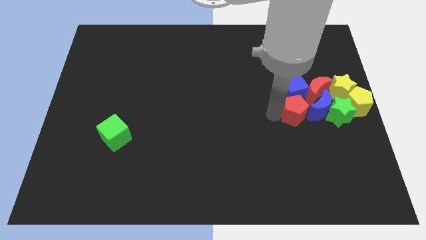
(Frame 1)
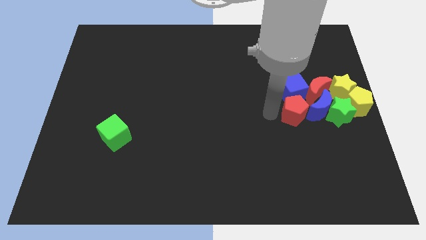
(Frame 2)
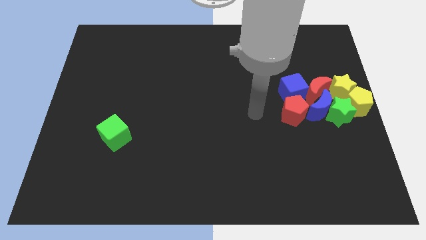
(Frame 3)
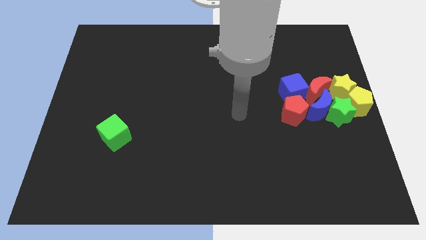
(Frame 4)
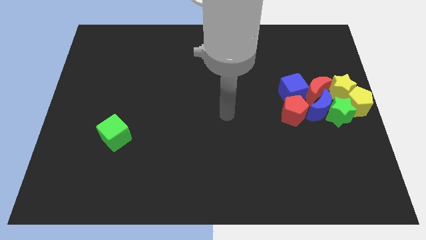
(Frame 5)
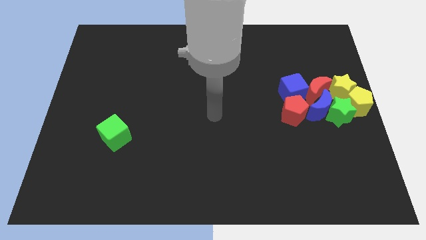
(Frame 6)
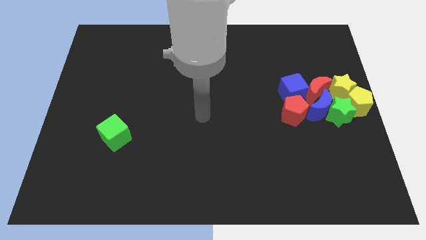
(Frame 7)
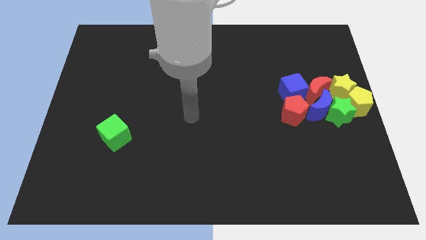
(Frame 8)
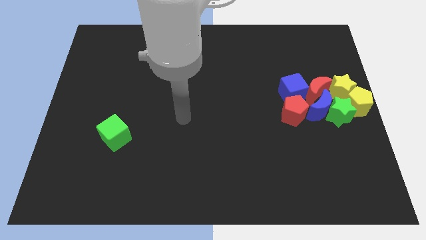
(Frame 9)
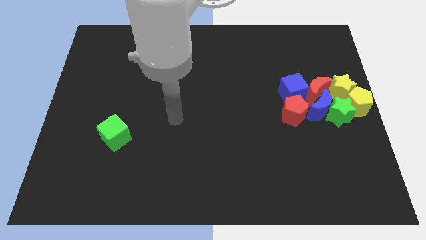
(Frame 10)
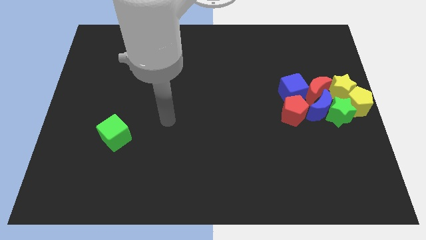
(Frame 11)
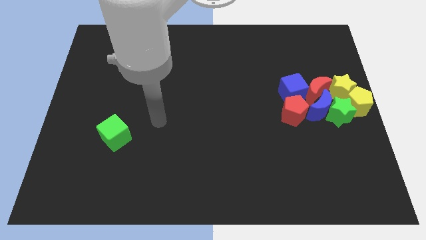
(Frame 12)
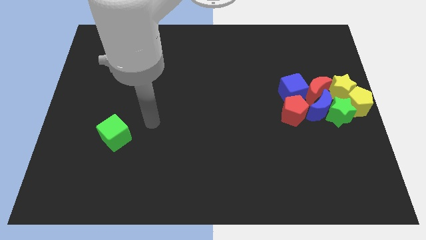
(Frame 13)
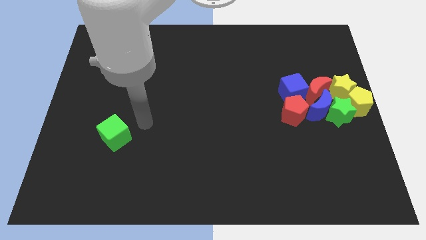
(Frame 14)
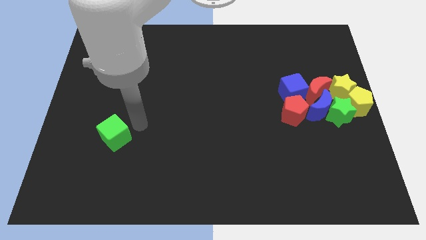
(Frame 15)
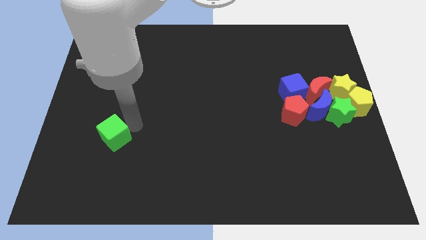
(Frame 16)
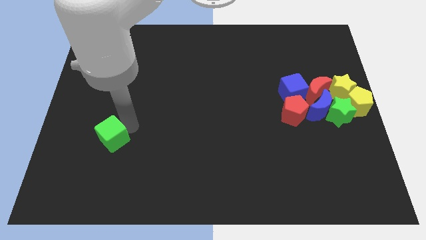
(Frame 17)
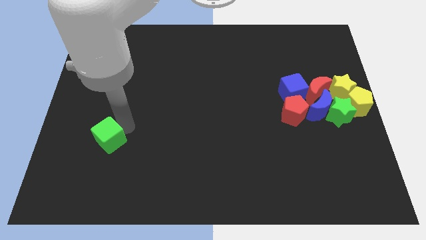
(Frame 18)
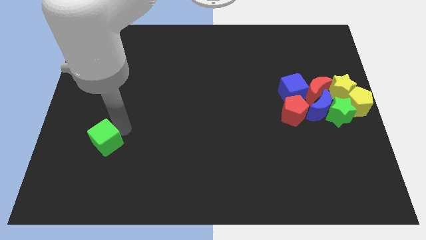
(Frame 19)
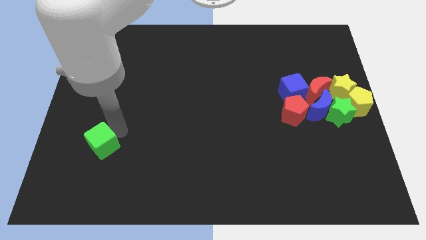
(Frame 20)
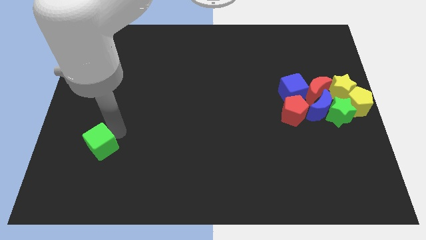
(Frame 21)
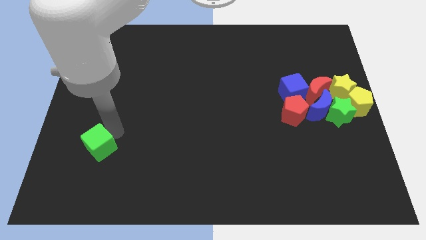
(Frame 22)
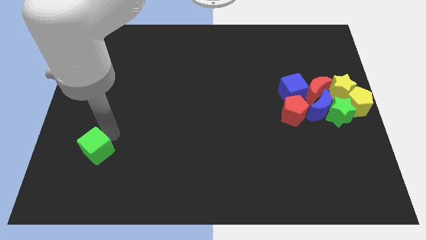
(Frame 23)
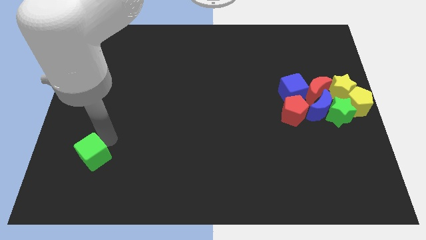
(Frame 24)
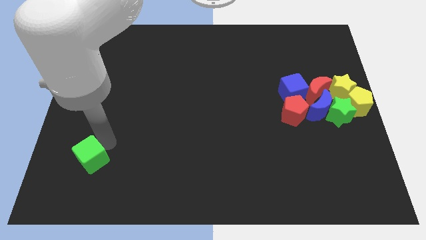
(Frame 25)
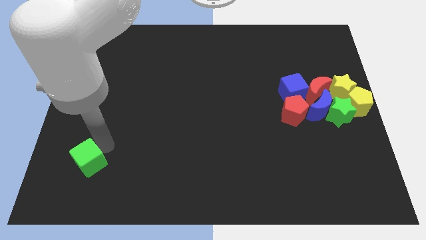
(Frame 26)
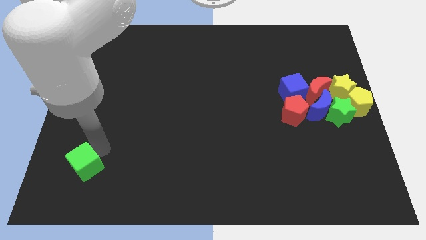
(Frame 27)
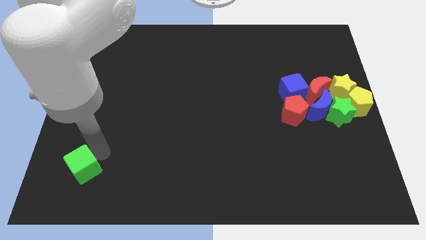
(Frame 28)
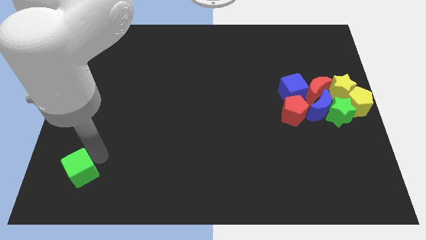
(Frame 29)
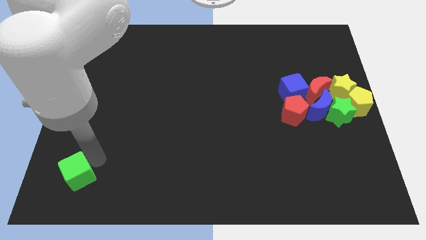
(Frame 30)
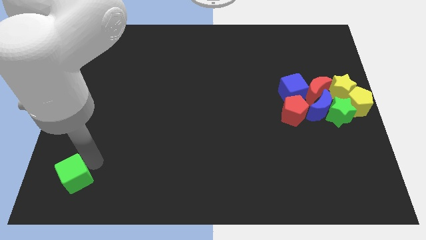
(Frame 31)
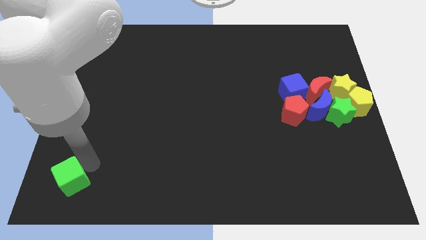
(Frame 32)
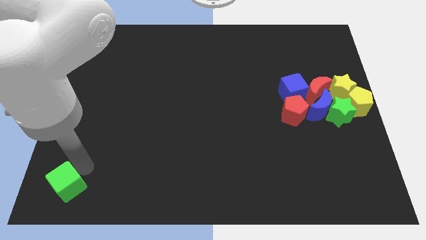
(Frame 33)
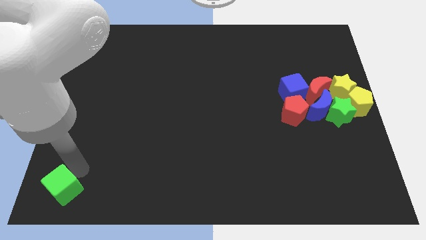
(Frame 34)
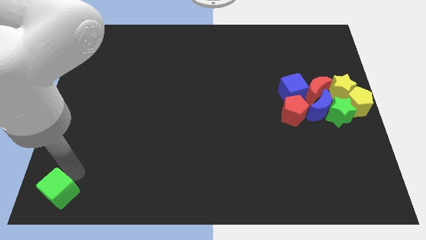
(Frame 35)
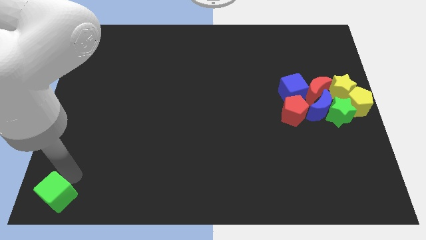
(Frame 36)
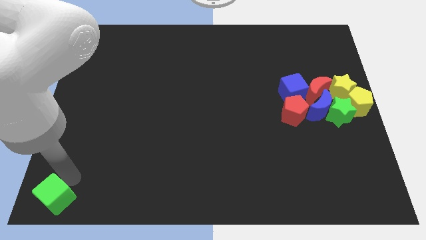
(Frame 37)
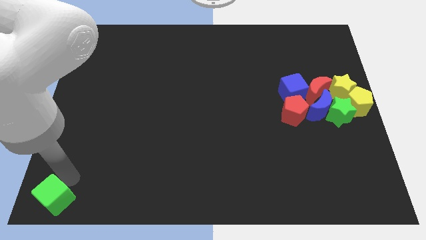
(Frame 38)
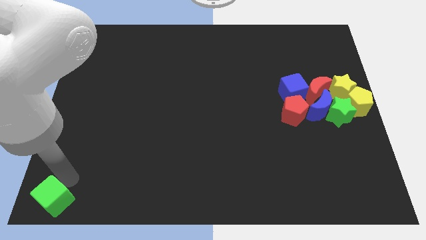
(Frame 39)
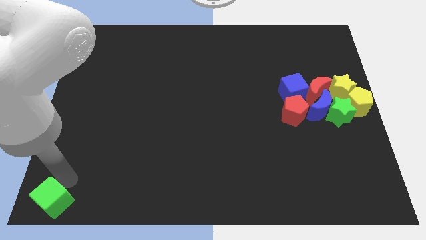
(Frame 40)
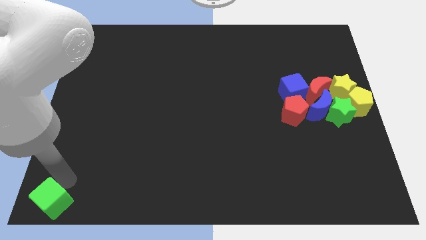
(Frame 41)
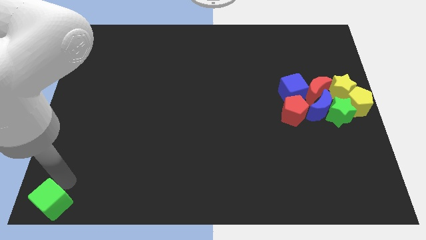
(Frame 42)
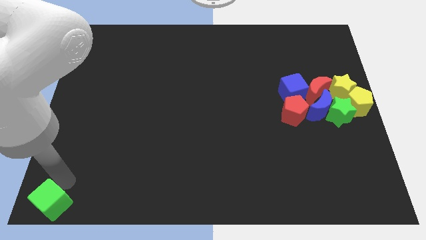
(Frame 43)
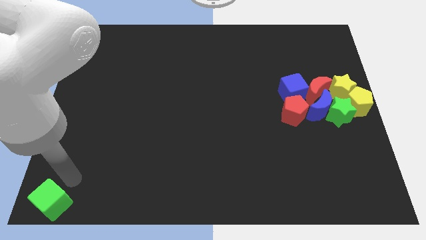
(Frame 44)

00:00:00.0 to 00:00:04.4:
push the green cube towards the bottom left corner of the board

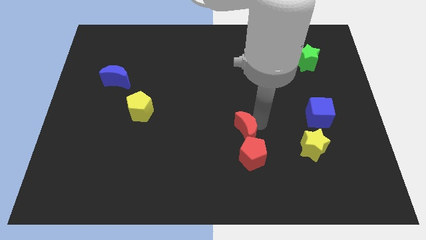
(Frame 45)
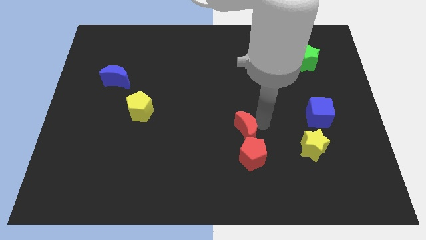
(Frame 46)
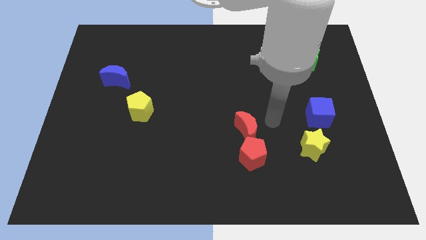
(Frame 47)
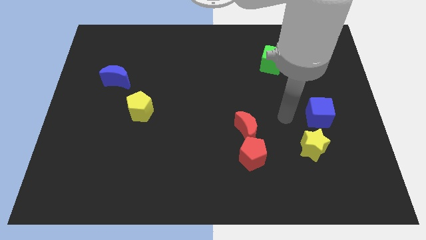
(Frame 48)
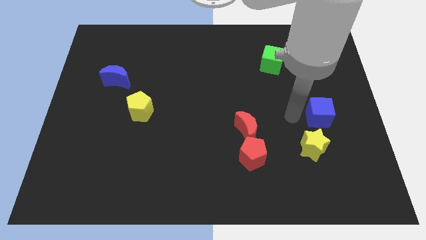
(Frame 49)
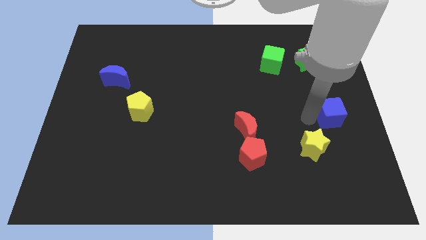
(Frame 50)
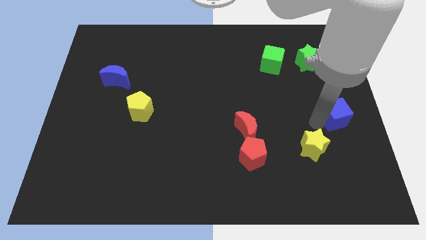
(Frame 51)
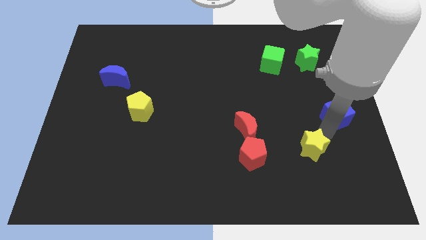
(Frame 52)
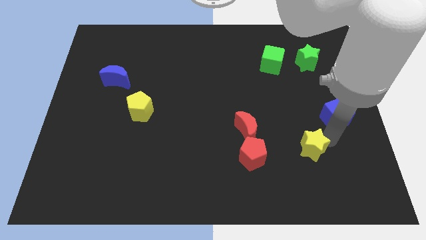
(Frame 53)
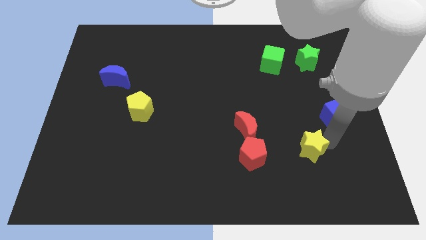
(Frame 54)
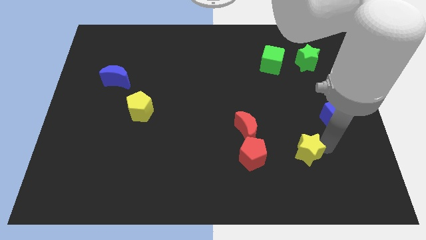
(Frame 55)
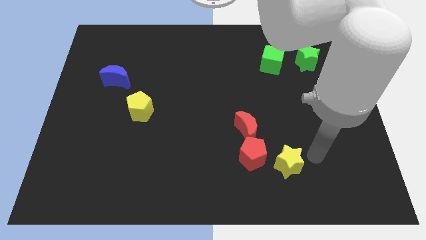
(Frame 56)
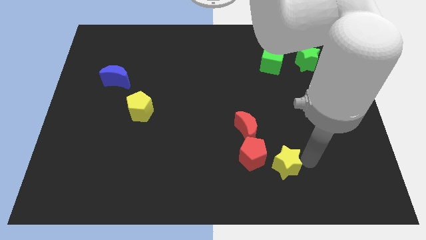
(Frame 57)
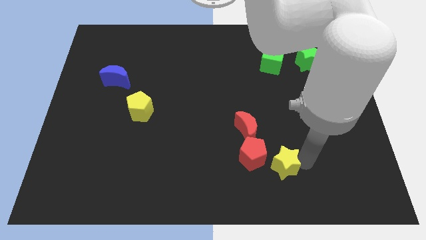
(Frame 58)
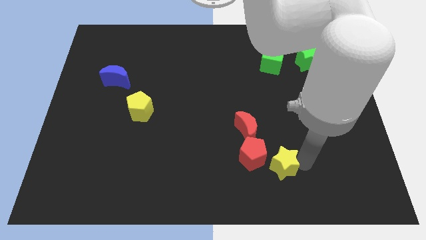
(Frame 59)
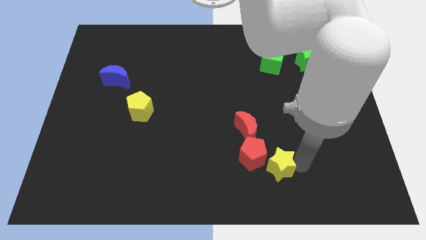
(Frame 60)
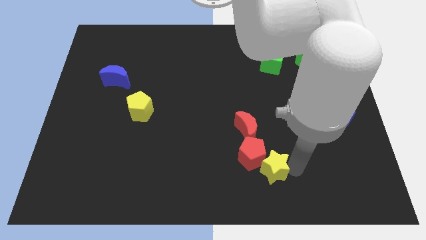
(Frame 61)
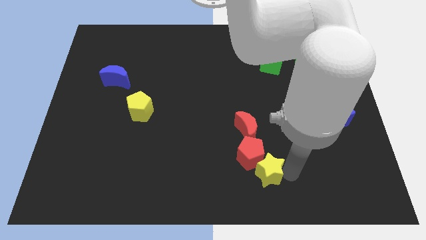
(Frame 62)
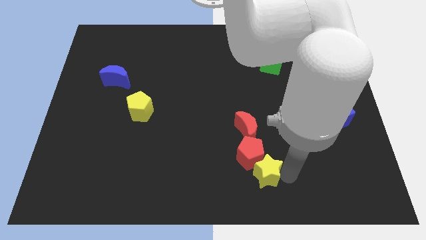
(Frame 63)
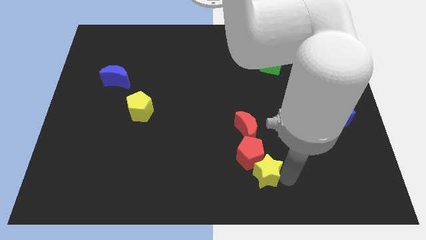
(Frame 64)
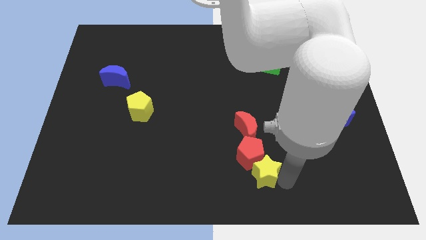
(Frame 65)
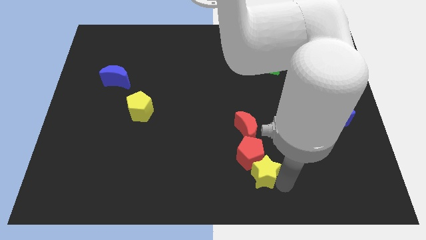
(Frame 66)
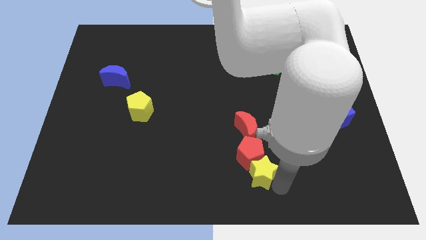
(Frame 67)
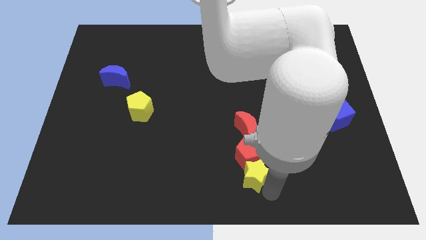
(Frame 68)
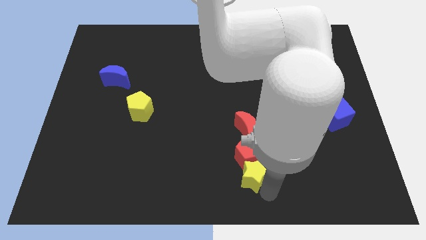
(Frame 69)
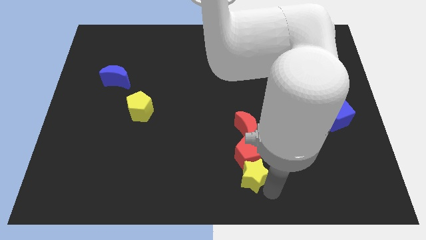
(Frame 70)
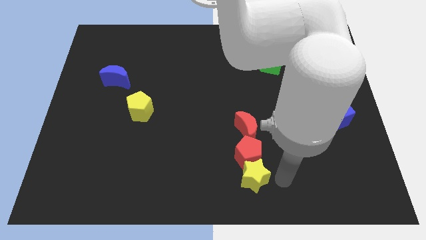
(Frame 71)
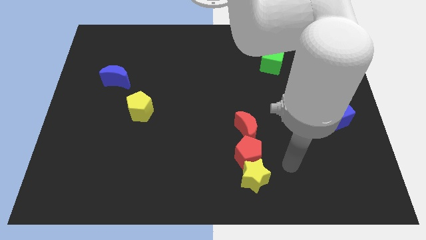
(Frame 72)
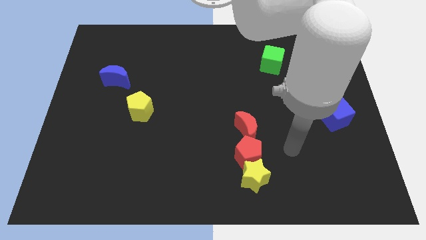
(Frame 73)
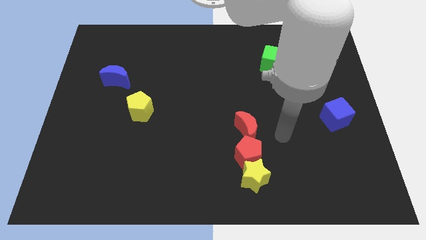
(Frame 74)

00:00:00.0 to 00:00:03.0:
move the yellow star to the bottom side of the red pentagon

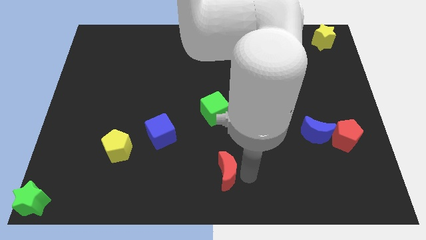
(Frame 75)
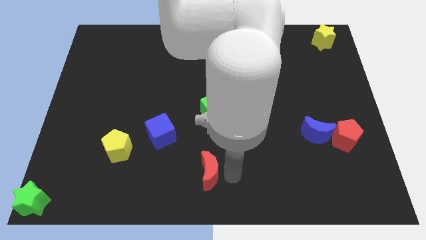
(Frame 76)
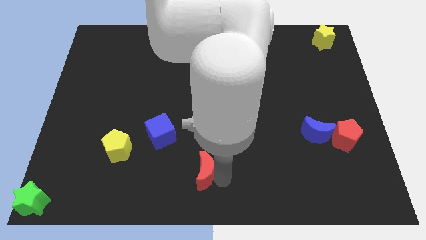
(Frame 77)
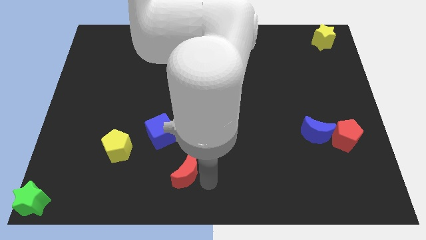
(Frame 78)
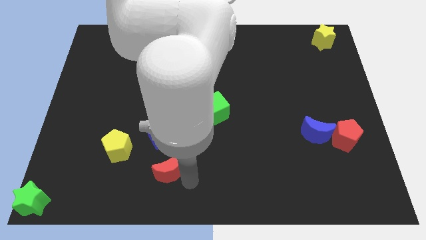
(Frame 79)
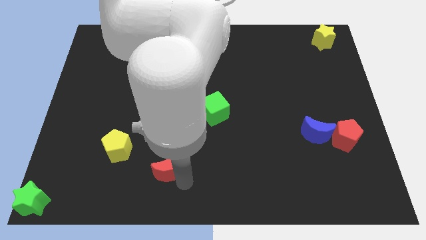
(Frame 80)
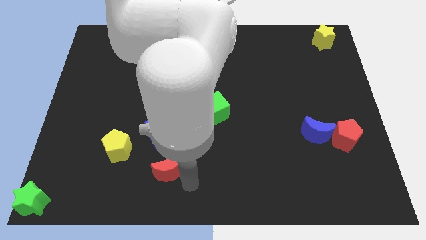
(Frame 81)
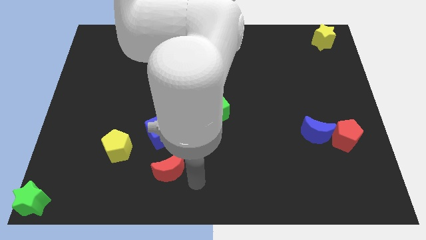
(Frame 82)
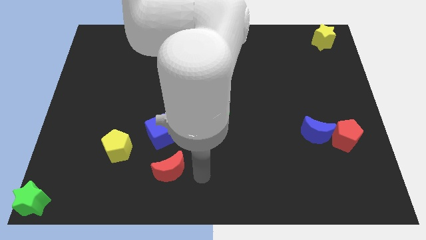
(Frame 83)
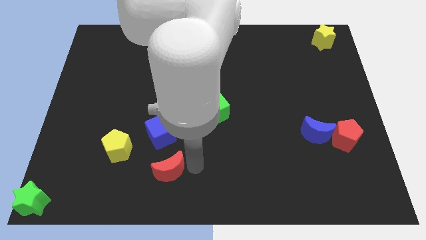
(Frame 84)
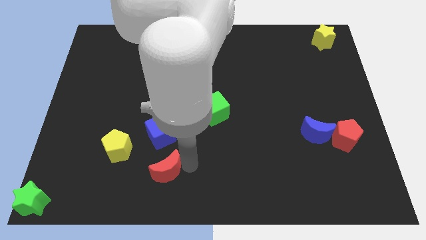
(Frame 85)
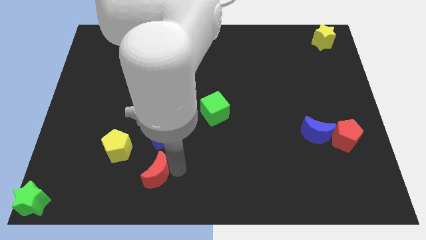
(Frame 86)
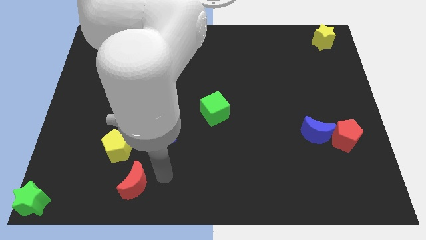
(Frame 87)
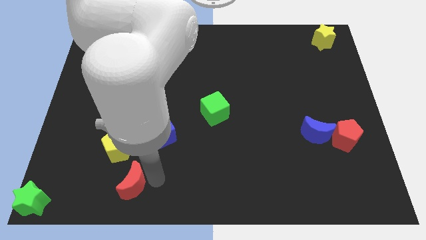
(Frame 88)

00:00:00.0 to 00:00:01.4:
push the red moon diagonally bottom left to the blue cube
